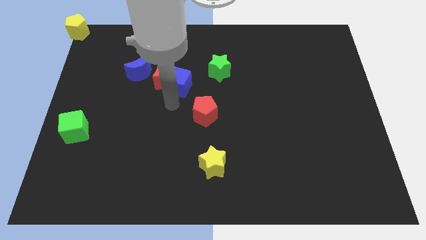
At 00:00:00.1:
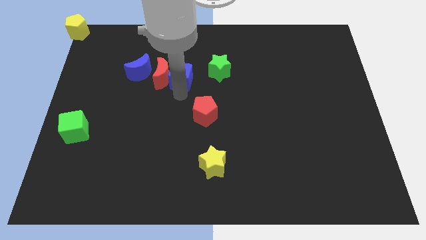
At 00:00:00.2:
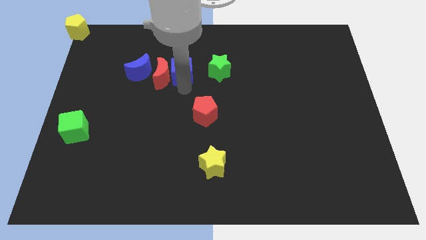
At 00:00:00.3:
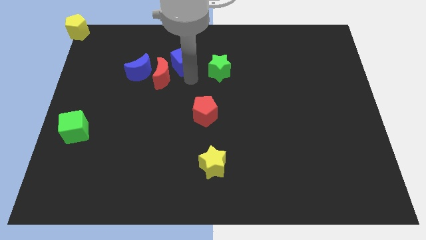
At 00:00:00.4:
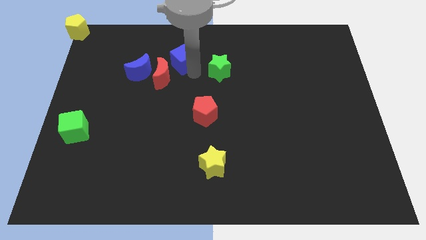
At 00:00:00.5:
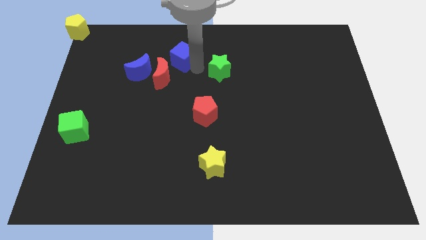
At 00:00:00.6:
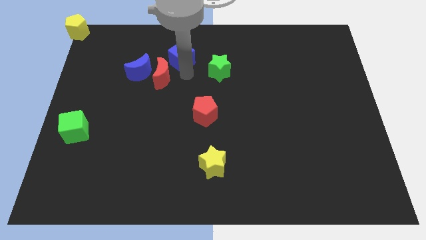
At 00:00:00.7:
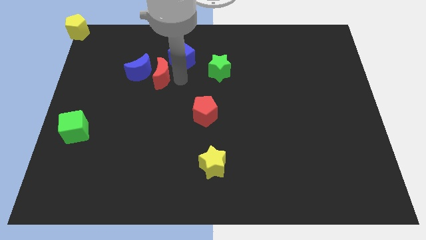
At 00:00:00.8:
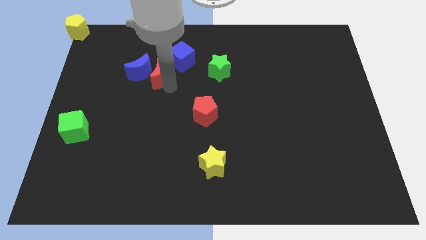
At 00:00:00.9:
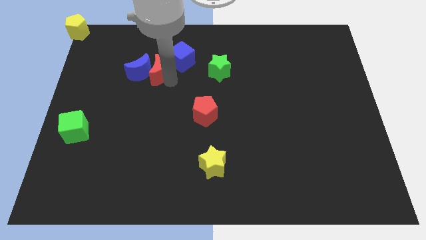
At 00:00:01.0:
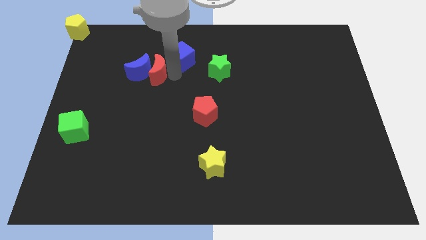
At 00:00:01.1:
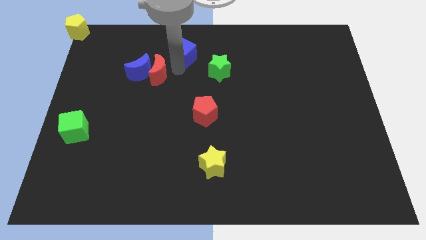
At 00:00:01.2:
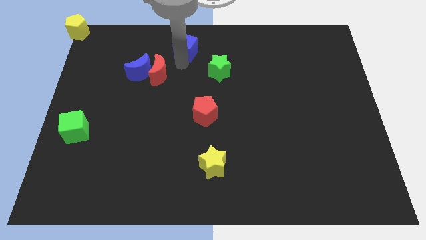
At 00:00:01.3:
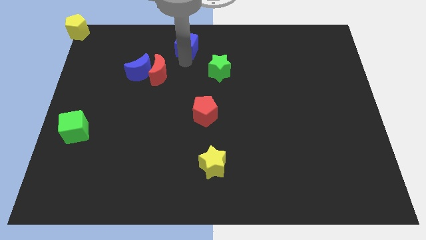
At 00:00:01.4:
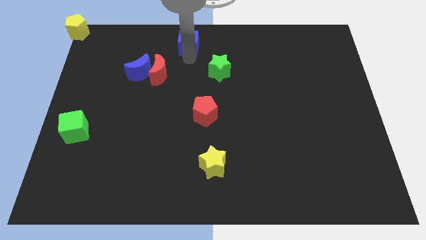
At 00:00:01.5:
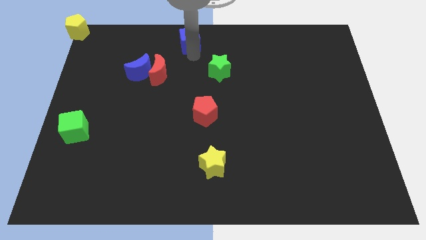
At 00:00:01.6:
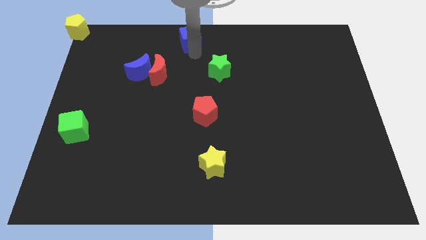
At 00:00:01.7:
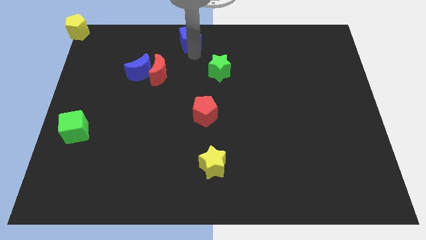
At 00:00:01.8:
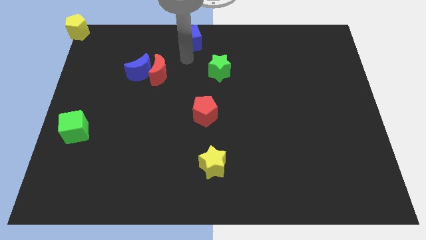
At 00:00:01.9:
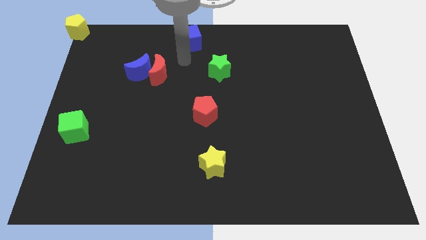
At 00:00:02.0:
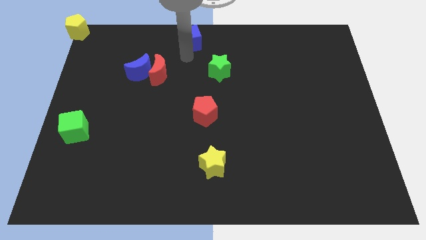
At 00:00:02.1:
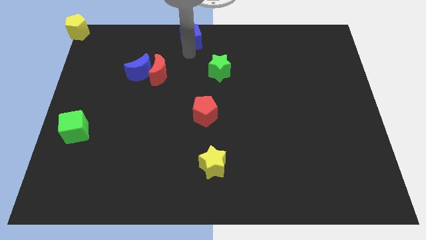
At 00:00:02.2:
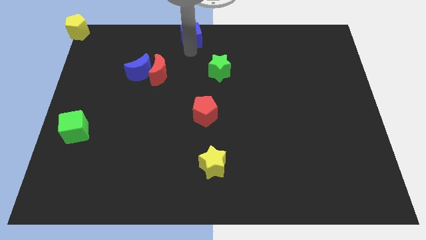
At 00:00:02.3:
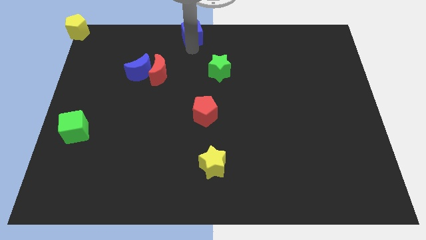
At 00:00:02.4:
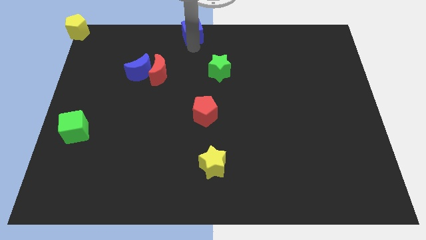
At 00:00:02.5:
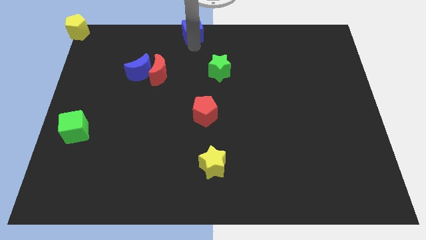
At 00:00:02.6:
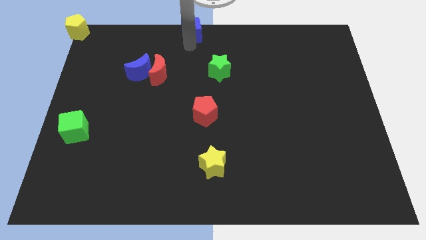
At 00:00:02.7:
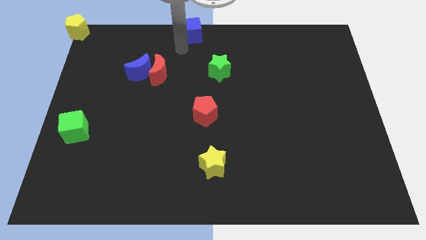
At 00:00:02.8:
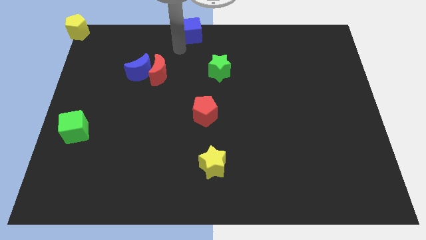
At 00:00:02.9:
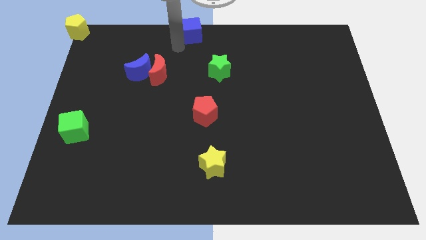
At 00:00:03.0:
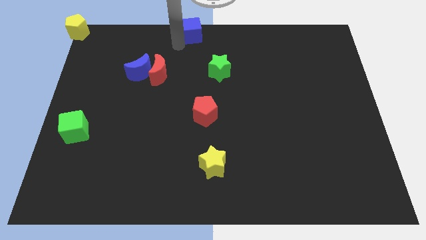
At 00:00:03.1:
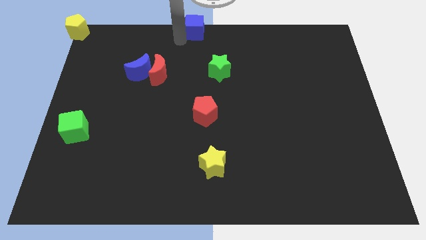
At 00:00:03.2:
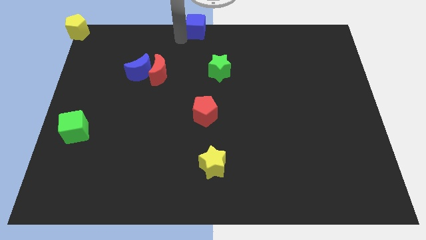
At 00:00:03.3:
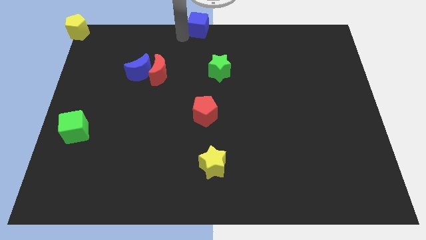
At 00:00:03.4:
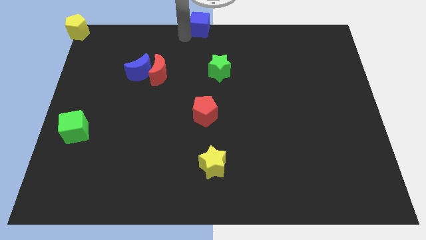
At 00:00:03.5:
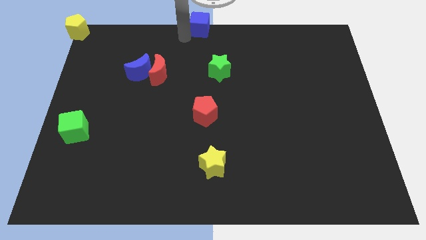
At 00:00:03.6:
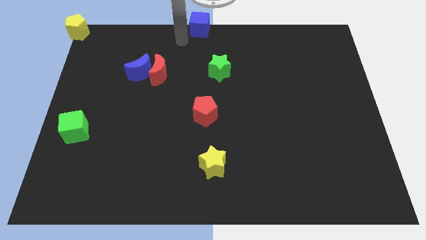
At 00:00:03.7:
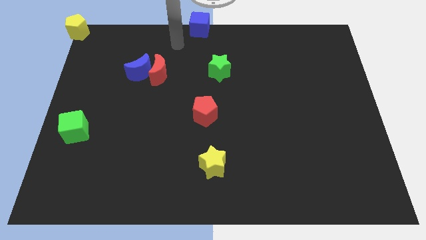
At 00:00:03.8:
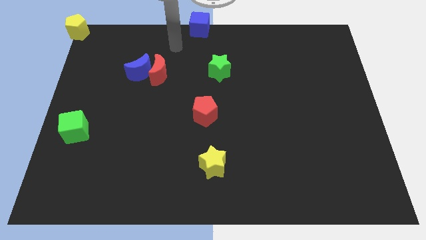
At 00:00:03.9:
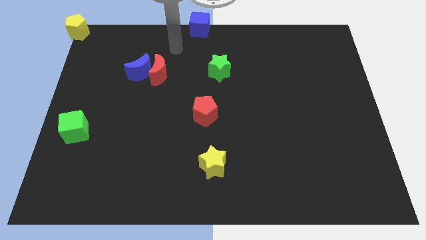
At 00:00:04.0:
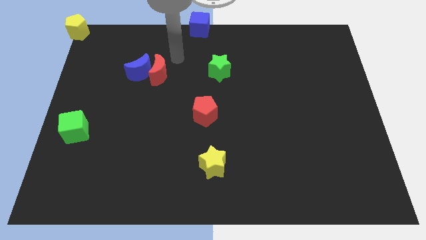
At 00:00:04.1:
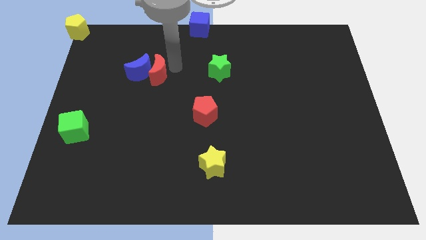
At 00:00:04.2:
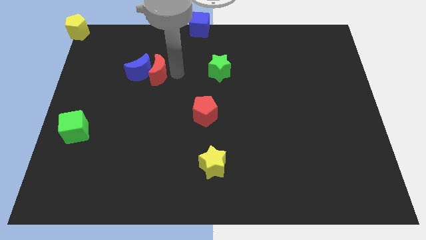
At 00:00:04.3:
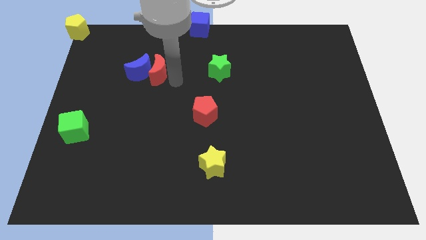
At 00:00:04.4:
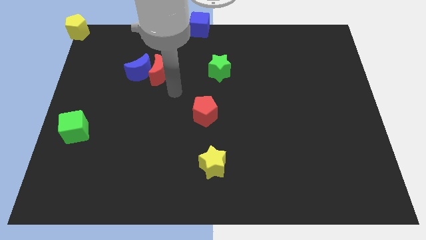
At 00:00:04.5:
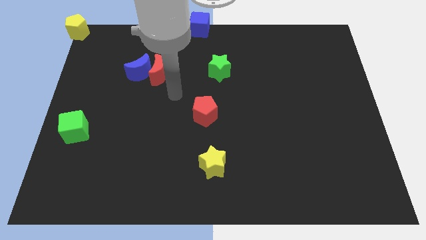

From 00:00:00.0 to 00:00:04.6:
push the blue cube to the top center of the board

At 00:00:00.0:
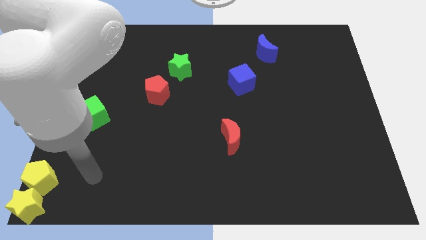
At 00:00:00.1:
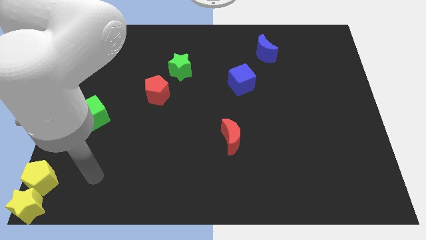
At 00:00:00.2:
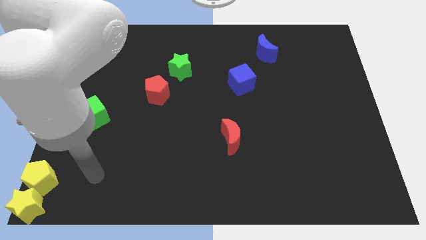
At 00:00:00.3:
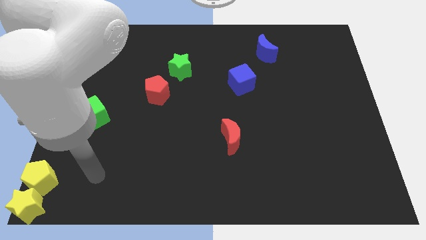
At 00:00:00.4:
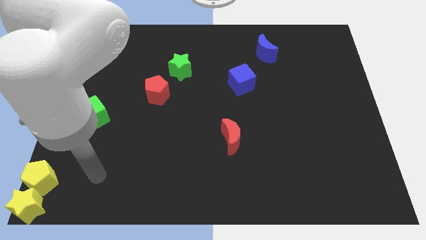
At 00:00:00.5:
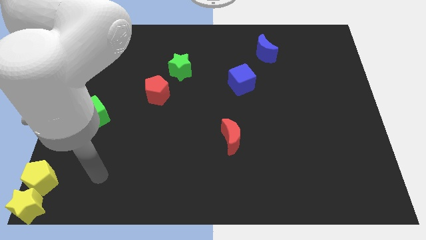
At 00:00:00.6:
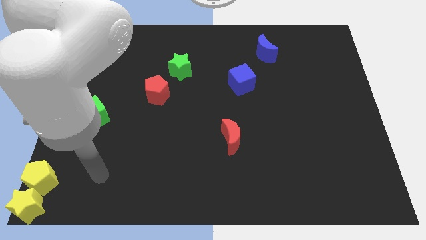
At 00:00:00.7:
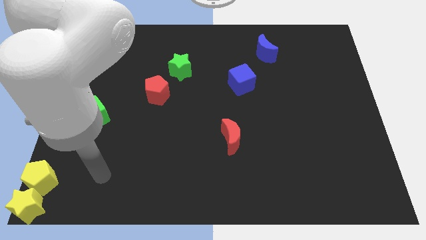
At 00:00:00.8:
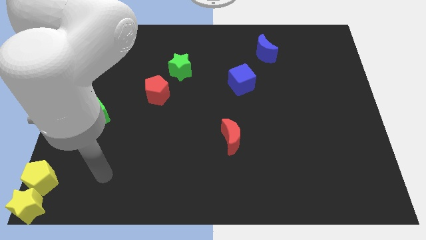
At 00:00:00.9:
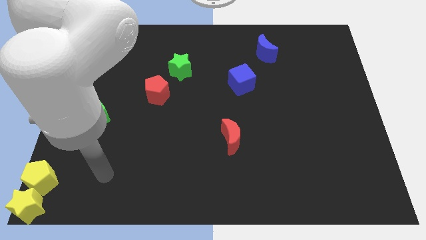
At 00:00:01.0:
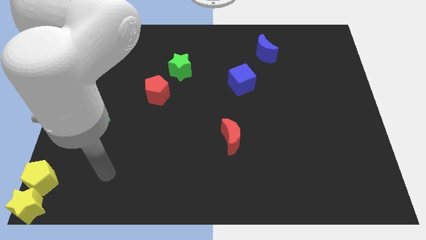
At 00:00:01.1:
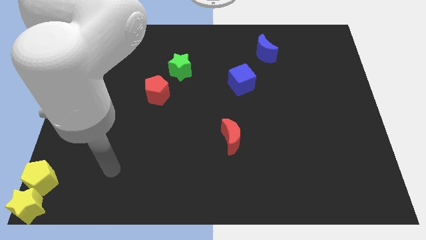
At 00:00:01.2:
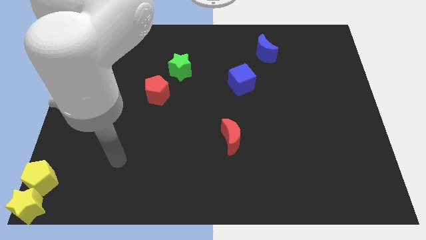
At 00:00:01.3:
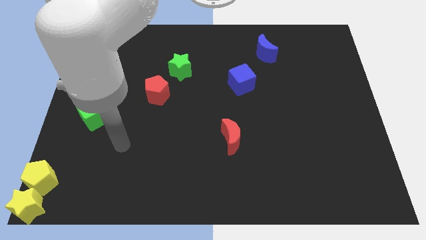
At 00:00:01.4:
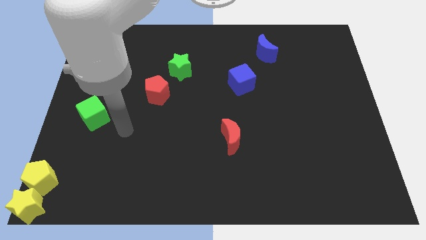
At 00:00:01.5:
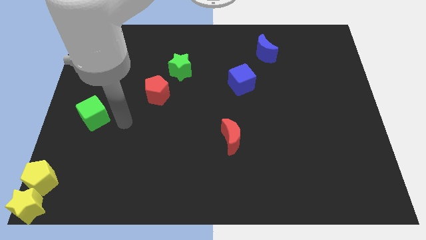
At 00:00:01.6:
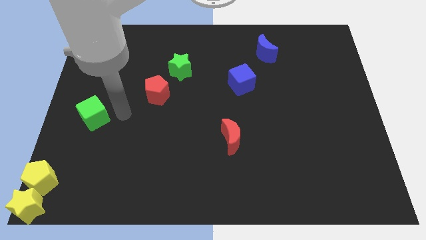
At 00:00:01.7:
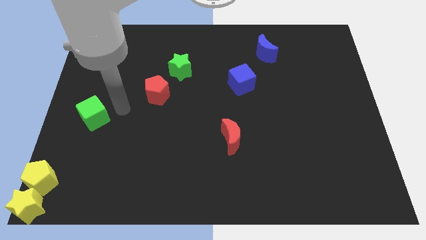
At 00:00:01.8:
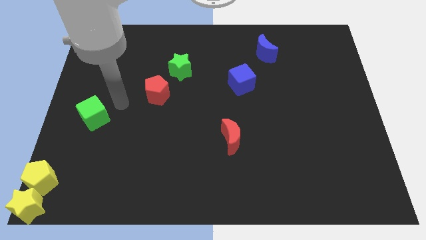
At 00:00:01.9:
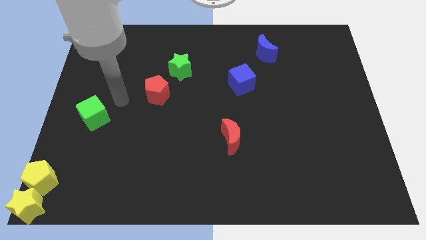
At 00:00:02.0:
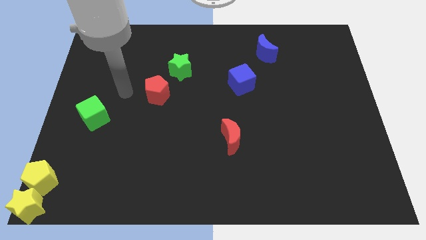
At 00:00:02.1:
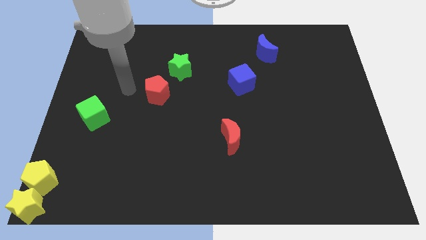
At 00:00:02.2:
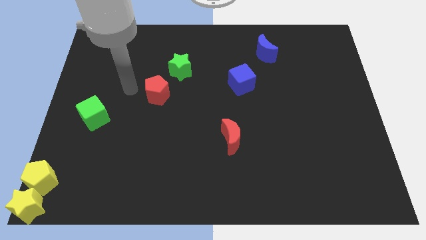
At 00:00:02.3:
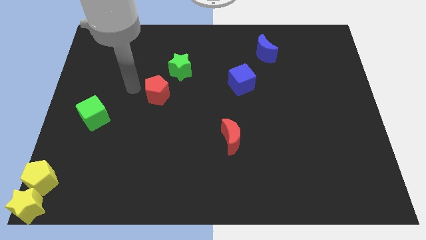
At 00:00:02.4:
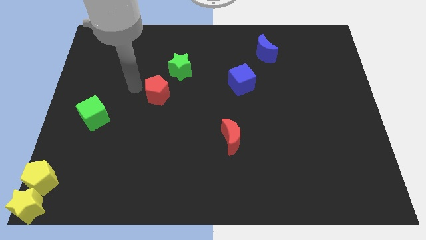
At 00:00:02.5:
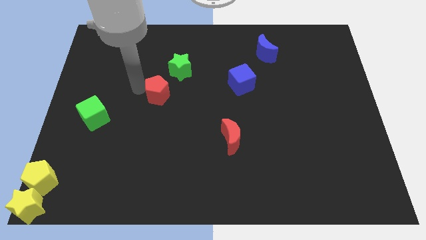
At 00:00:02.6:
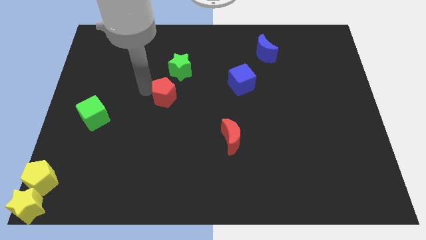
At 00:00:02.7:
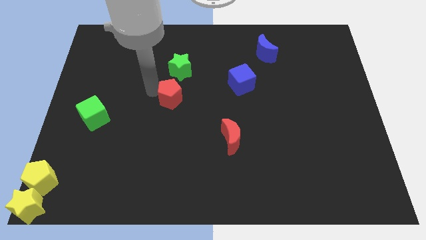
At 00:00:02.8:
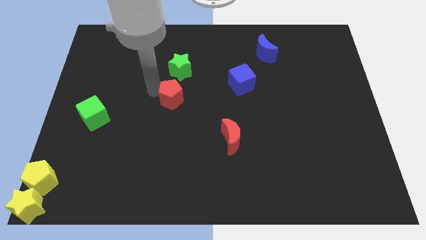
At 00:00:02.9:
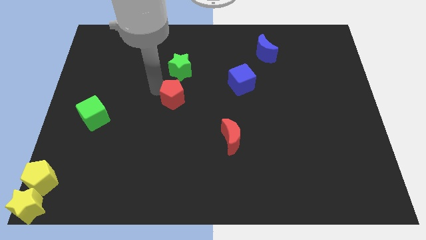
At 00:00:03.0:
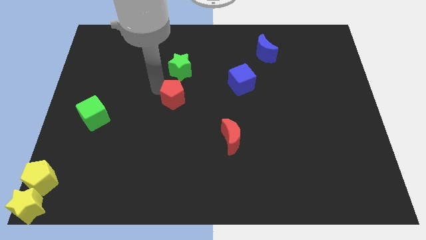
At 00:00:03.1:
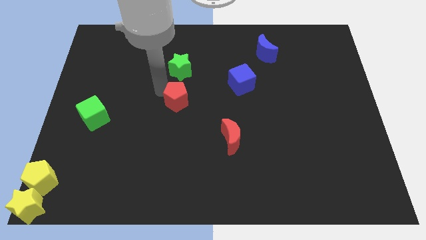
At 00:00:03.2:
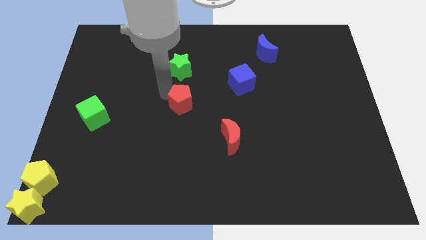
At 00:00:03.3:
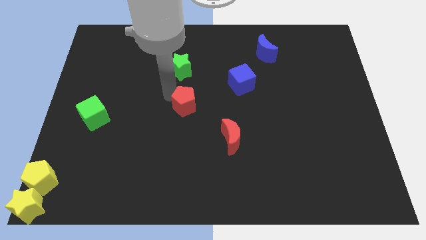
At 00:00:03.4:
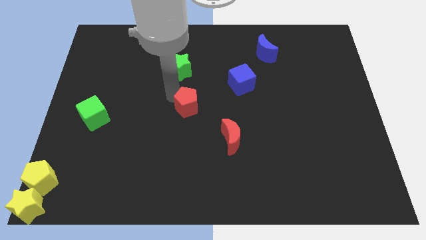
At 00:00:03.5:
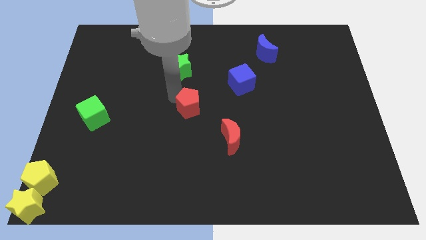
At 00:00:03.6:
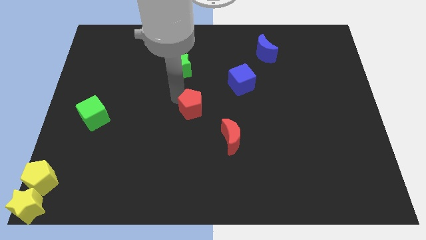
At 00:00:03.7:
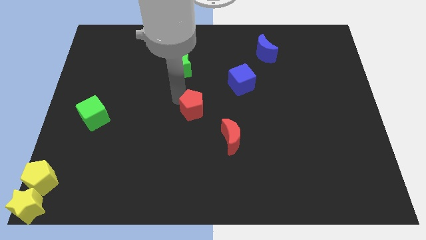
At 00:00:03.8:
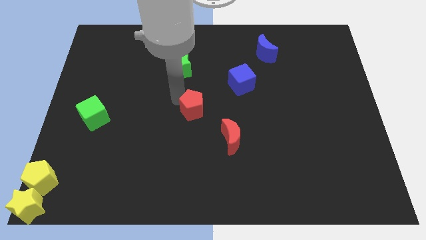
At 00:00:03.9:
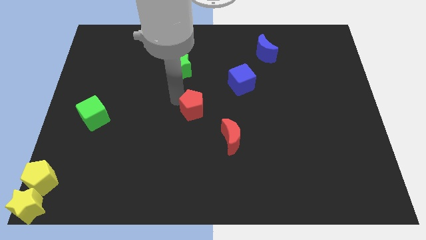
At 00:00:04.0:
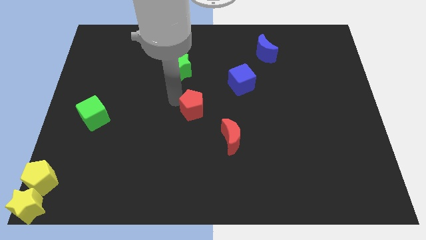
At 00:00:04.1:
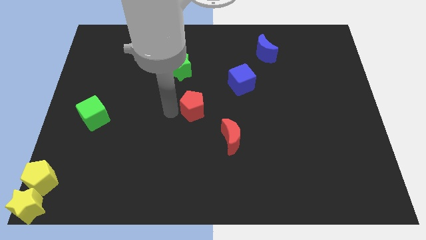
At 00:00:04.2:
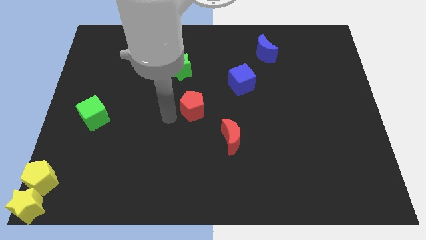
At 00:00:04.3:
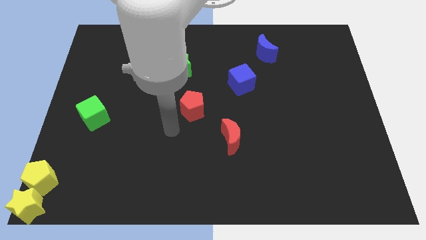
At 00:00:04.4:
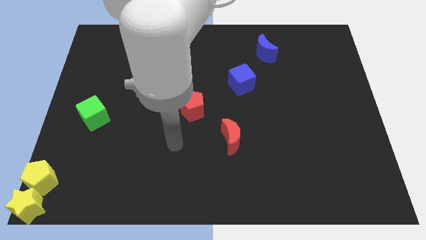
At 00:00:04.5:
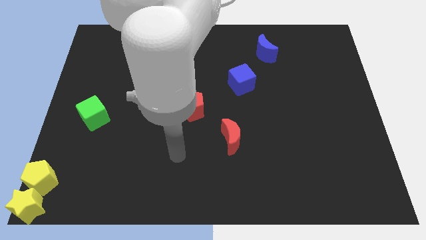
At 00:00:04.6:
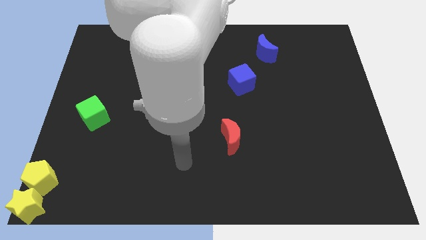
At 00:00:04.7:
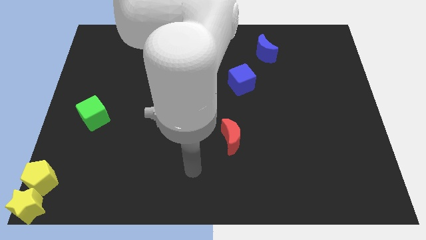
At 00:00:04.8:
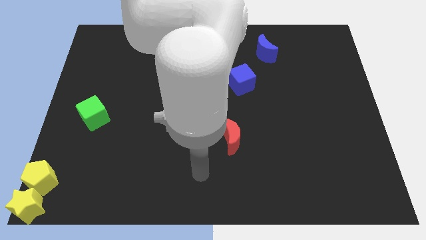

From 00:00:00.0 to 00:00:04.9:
move the red pentagon to the center of the board
